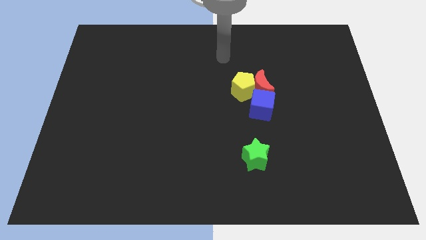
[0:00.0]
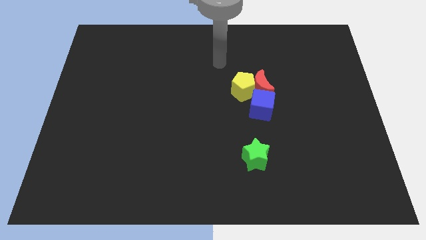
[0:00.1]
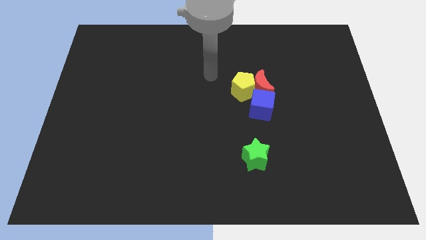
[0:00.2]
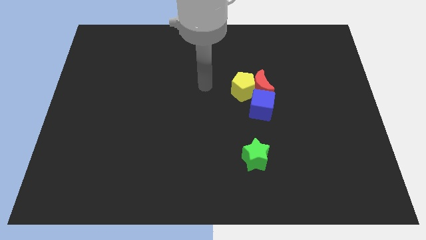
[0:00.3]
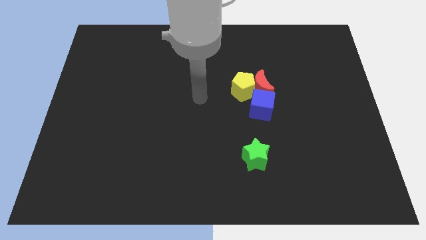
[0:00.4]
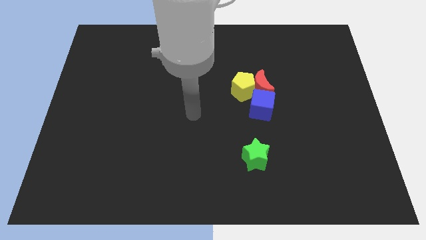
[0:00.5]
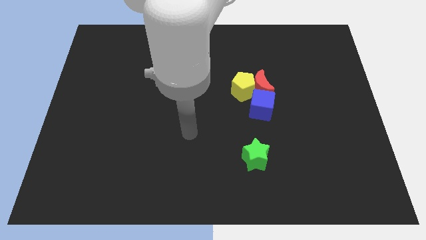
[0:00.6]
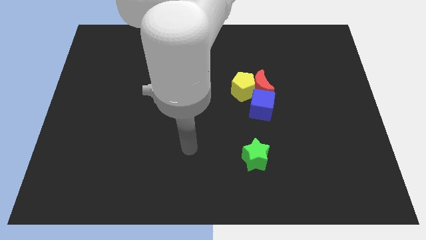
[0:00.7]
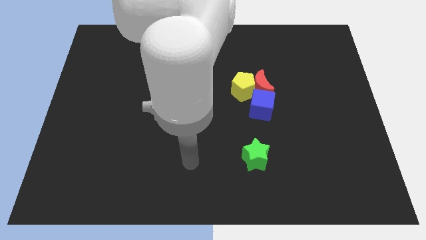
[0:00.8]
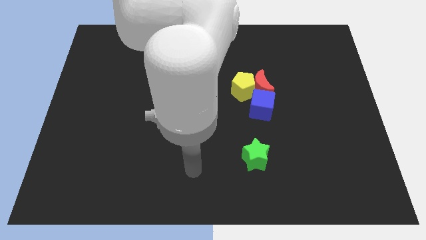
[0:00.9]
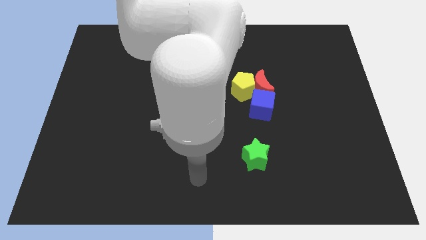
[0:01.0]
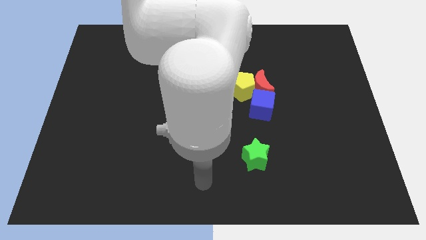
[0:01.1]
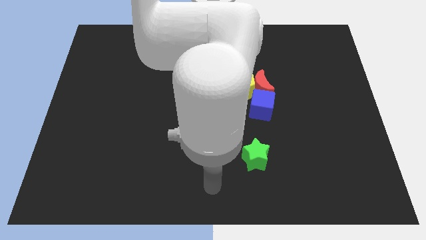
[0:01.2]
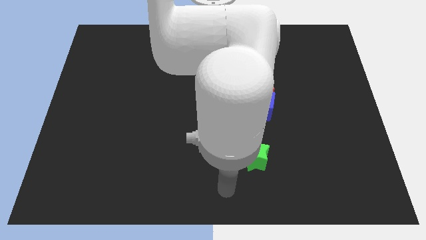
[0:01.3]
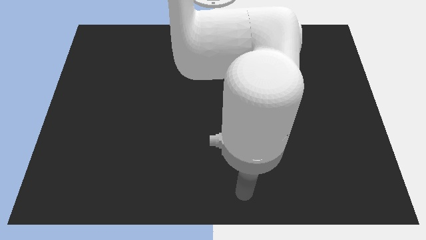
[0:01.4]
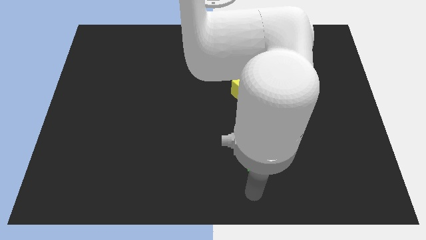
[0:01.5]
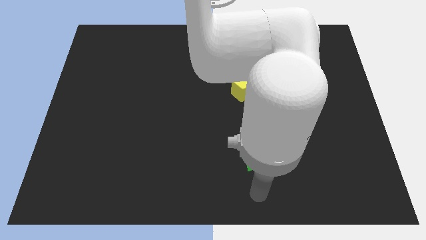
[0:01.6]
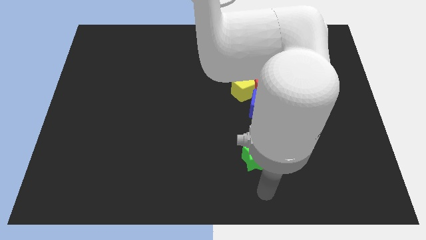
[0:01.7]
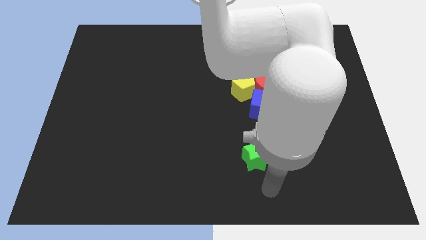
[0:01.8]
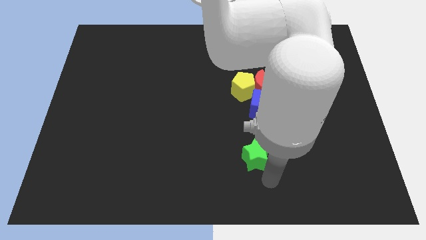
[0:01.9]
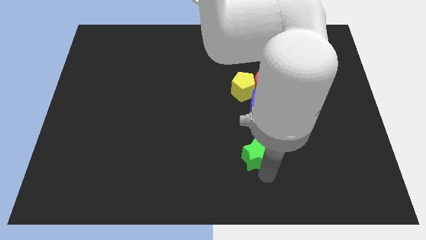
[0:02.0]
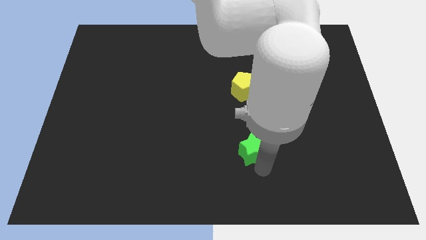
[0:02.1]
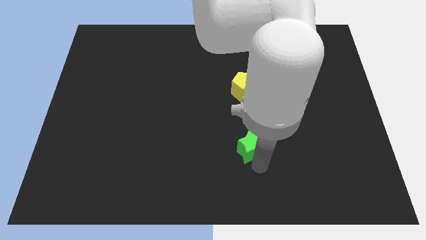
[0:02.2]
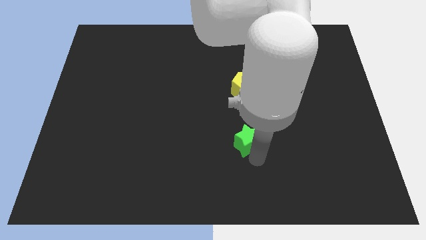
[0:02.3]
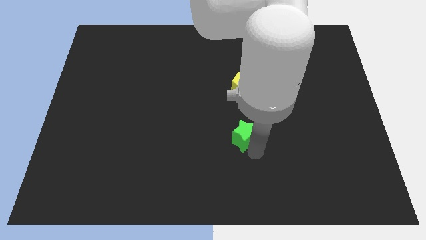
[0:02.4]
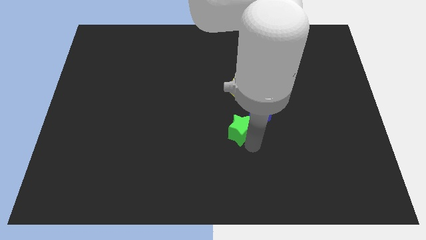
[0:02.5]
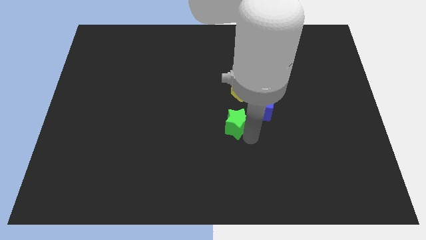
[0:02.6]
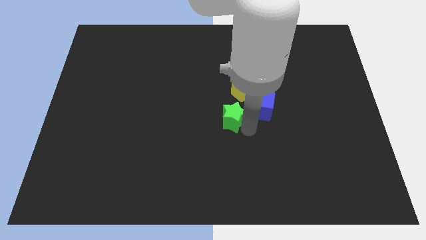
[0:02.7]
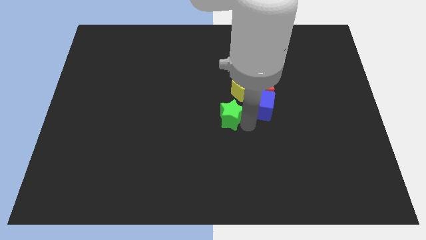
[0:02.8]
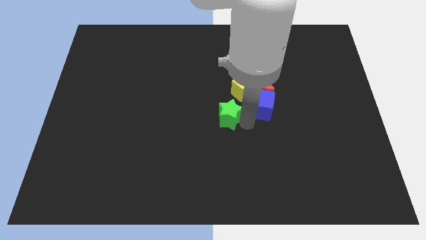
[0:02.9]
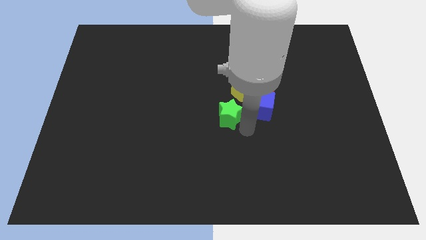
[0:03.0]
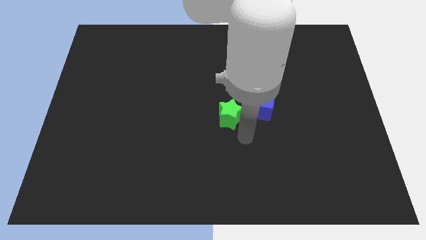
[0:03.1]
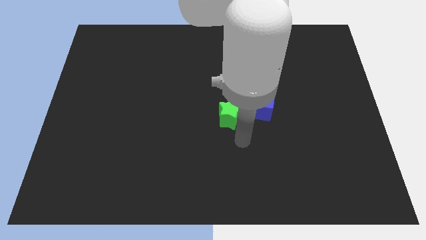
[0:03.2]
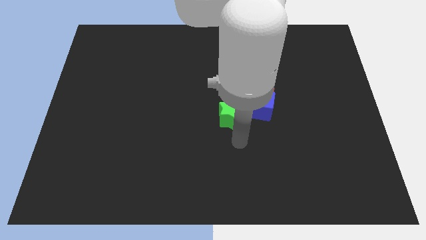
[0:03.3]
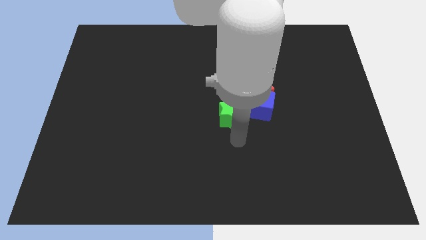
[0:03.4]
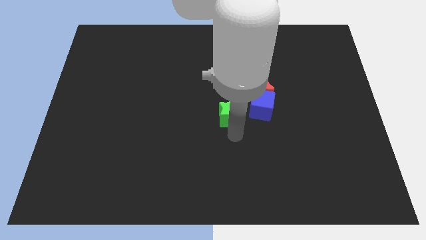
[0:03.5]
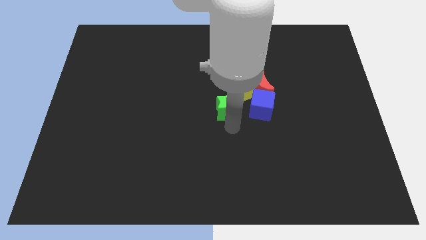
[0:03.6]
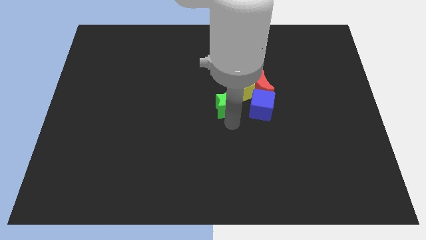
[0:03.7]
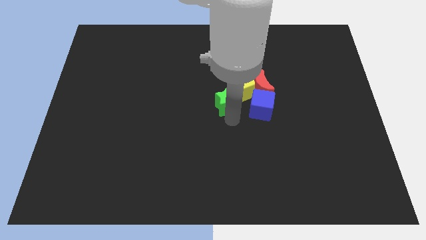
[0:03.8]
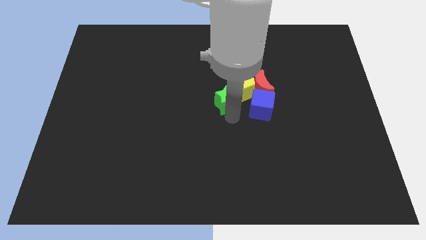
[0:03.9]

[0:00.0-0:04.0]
put the star towards the pentagon

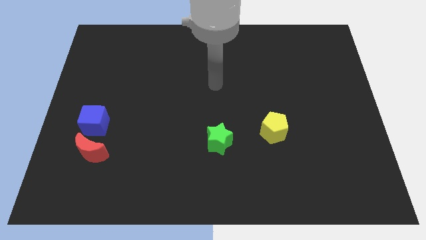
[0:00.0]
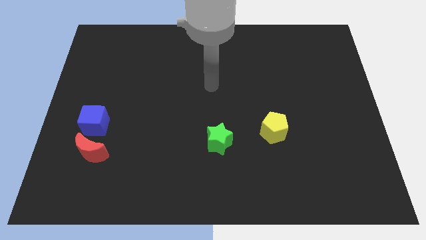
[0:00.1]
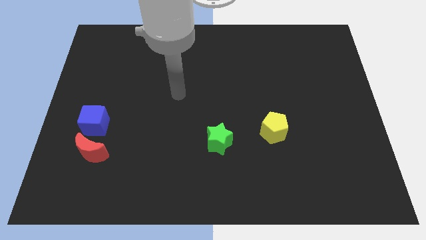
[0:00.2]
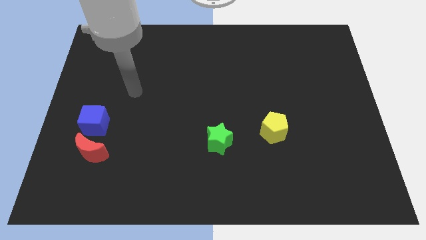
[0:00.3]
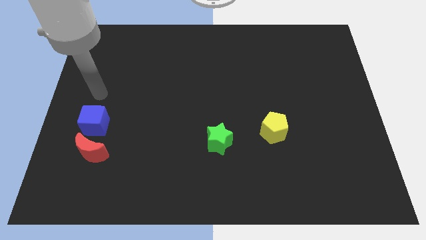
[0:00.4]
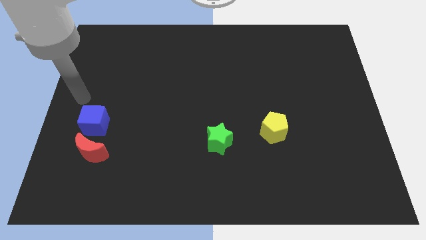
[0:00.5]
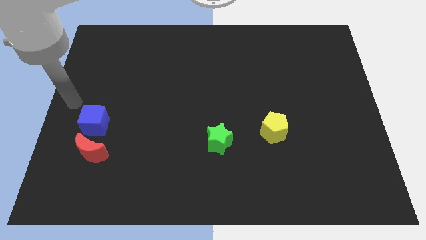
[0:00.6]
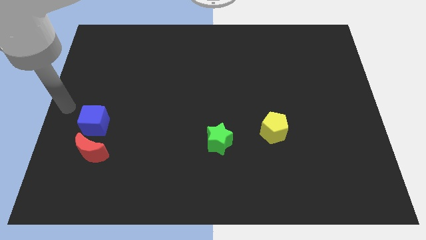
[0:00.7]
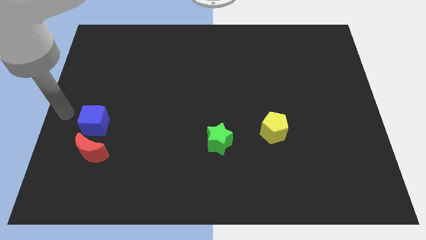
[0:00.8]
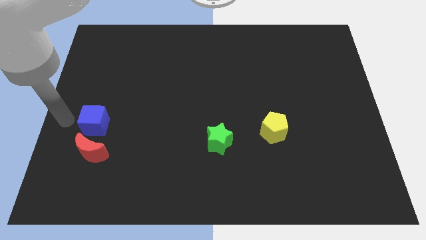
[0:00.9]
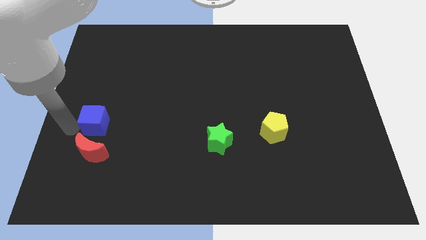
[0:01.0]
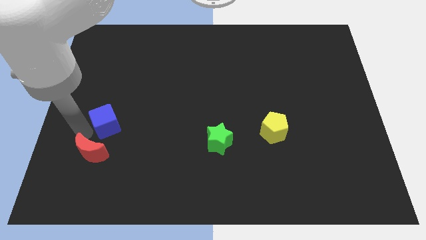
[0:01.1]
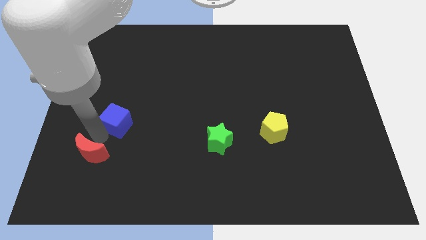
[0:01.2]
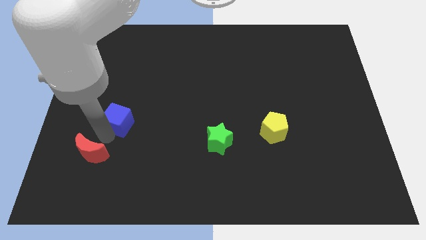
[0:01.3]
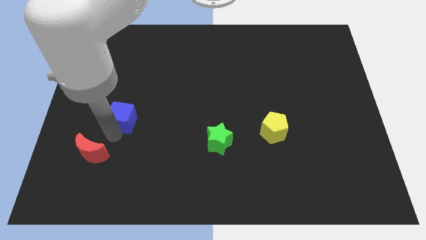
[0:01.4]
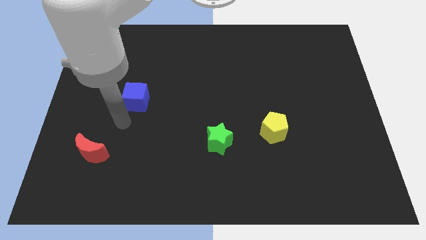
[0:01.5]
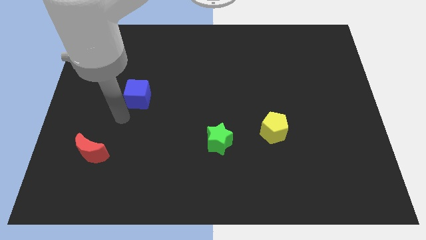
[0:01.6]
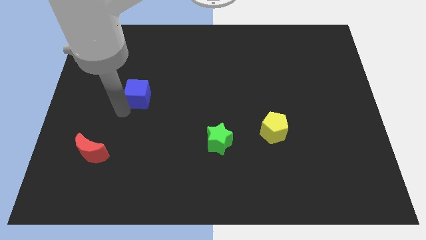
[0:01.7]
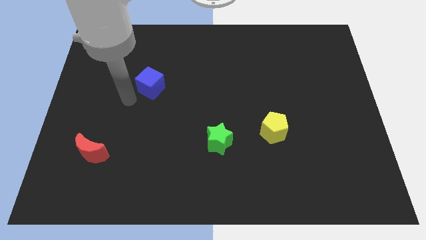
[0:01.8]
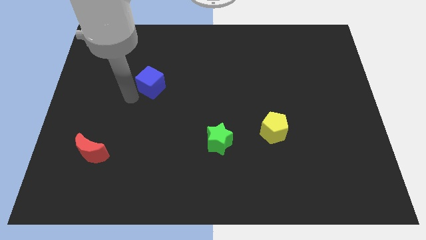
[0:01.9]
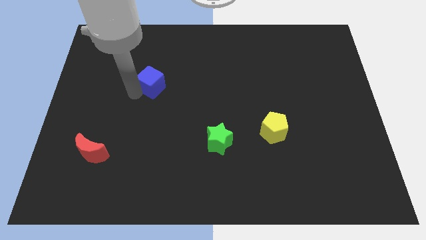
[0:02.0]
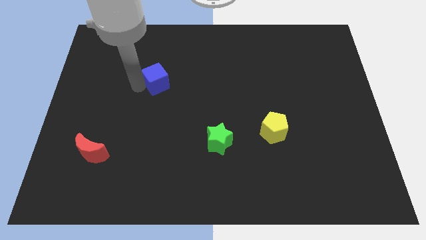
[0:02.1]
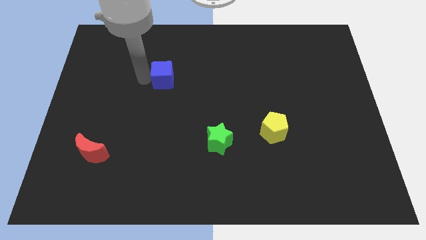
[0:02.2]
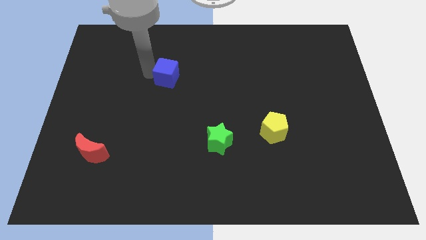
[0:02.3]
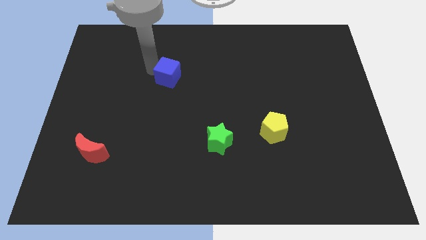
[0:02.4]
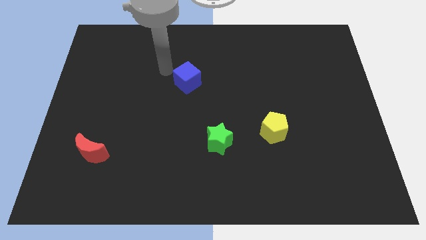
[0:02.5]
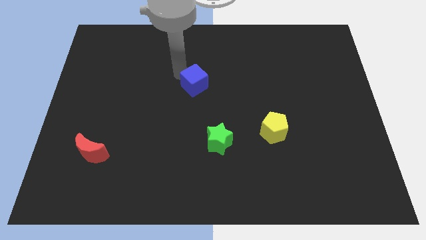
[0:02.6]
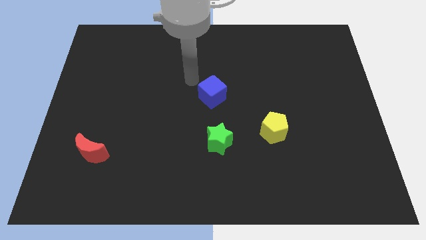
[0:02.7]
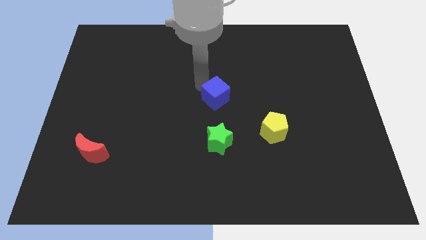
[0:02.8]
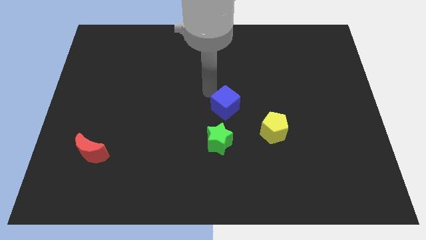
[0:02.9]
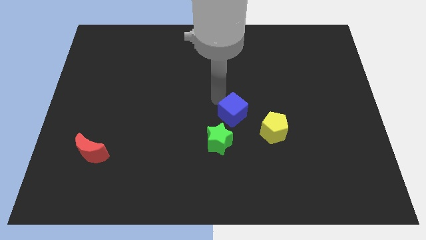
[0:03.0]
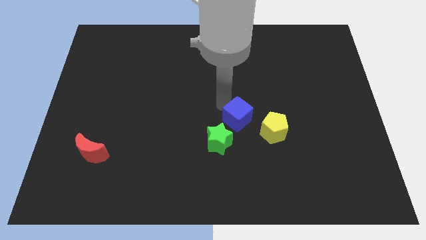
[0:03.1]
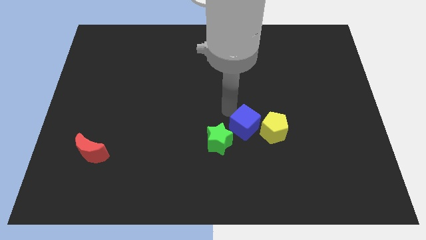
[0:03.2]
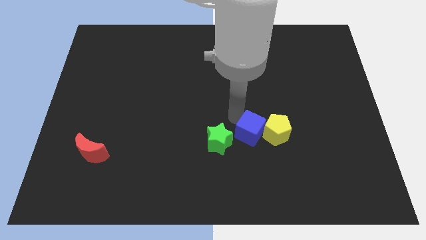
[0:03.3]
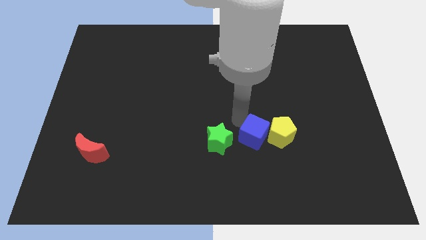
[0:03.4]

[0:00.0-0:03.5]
move the blue block next to the yellow pentagon

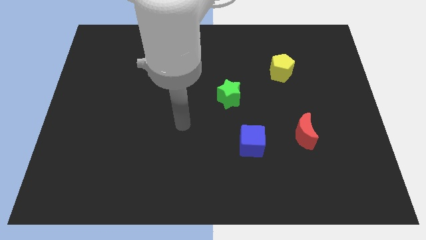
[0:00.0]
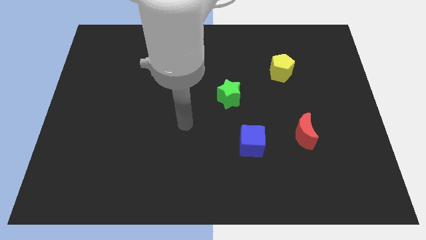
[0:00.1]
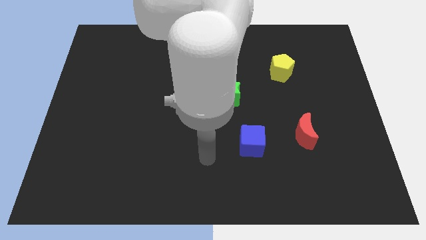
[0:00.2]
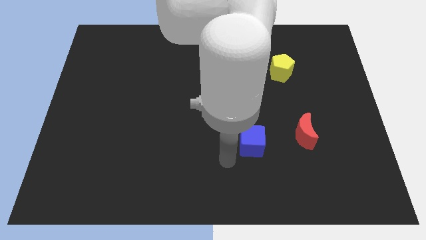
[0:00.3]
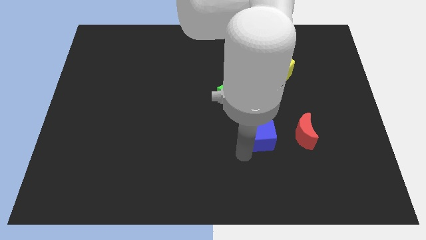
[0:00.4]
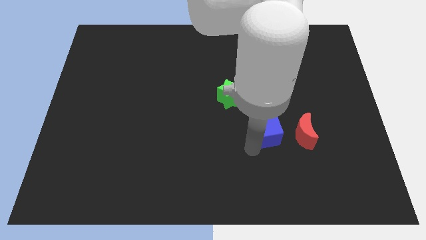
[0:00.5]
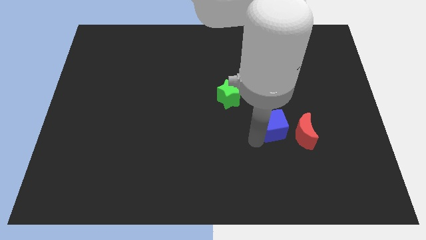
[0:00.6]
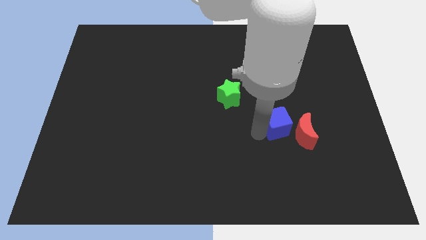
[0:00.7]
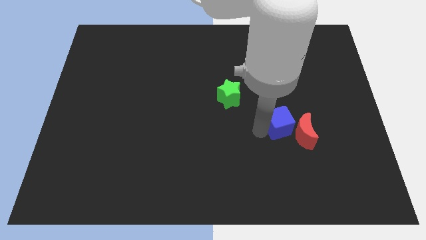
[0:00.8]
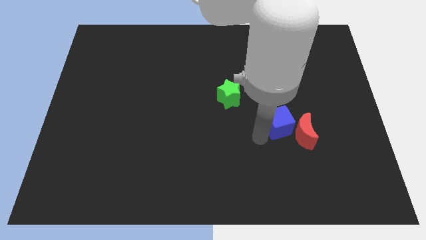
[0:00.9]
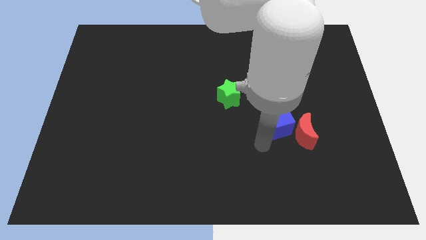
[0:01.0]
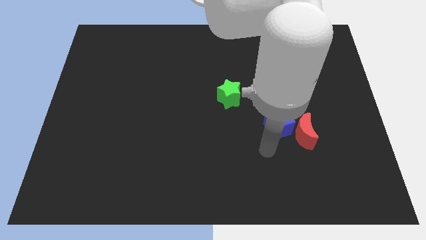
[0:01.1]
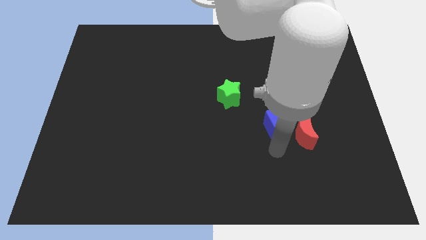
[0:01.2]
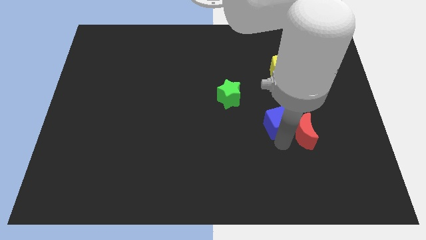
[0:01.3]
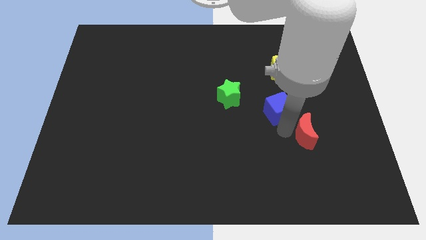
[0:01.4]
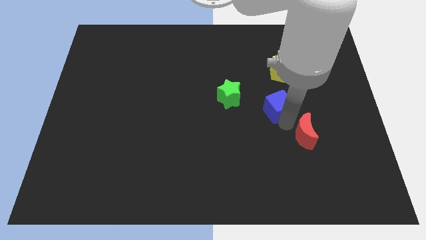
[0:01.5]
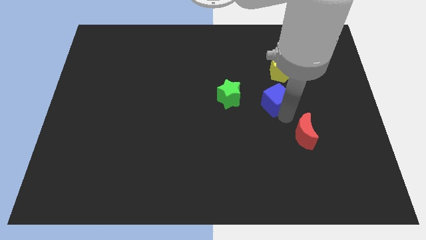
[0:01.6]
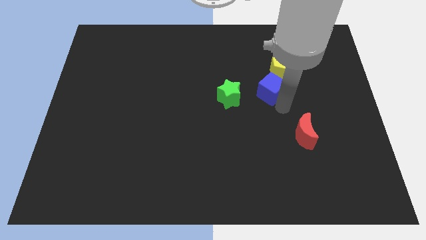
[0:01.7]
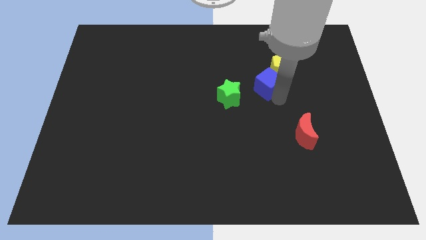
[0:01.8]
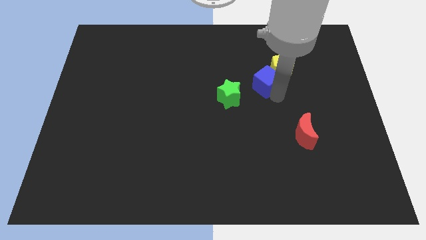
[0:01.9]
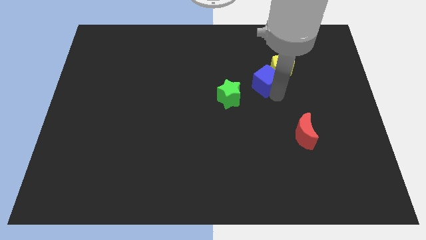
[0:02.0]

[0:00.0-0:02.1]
slide the cube towards the yellow block
